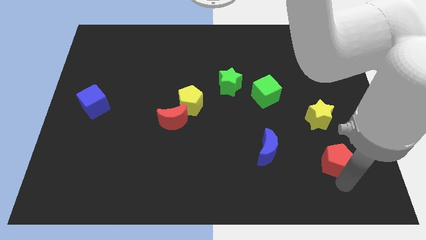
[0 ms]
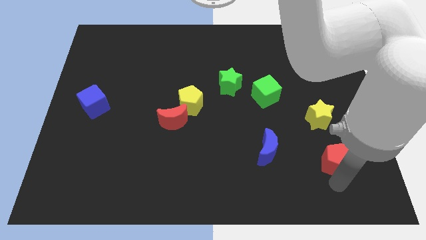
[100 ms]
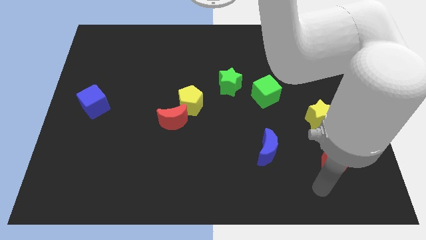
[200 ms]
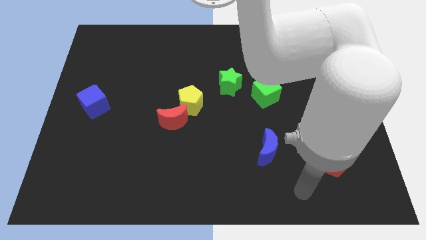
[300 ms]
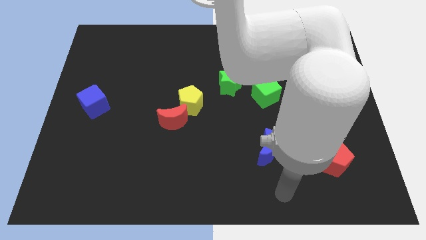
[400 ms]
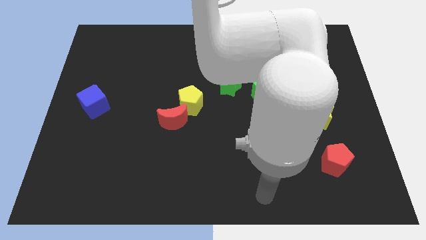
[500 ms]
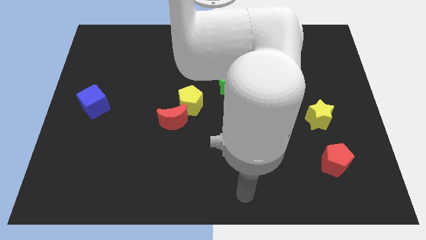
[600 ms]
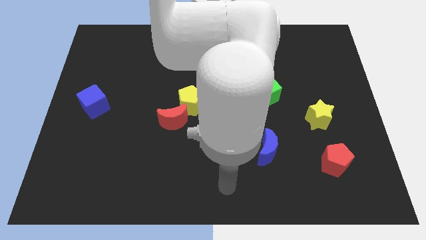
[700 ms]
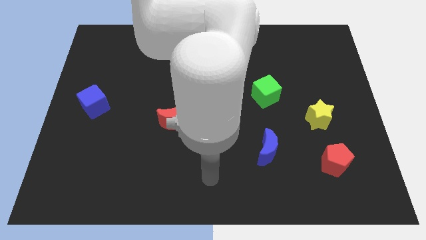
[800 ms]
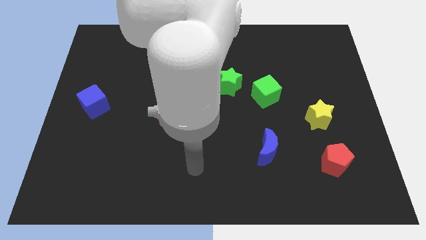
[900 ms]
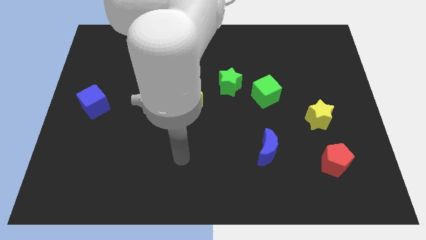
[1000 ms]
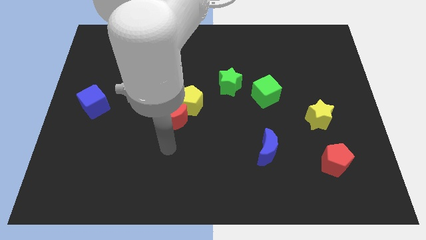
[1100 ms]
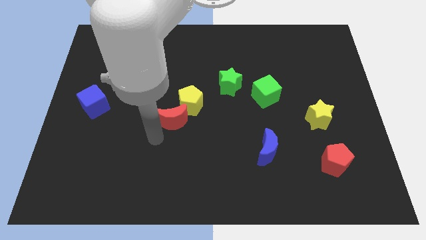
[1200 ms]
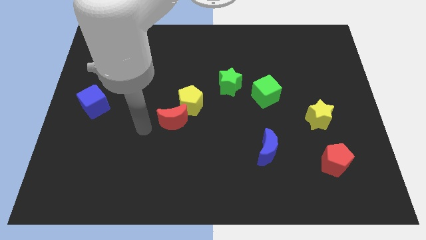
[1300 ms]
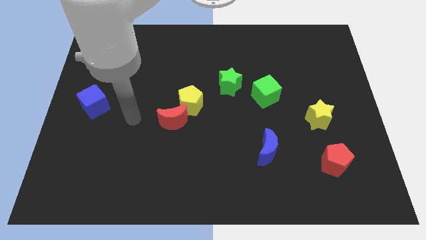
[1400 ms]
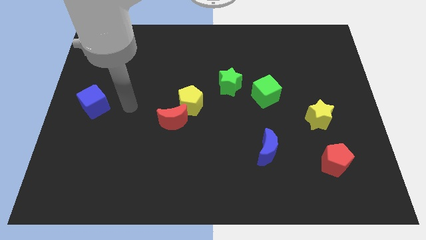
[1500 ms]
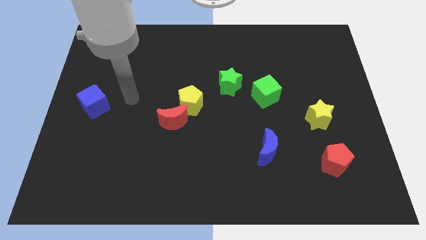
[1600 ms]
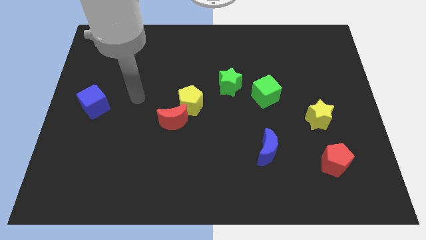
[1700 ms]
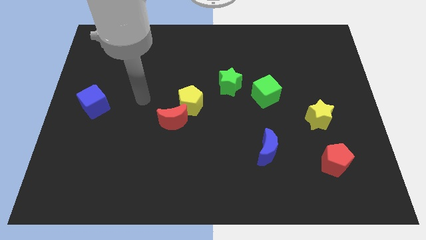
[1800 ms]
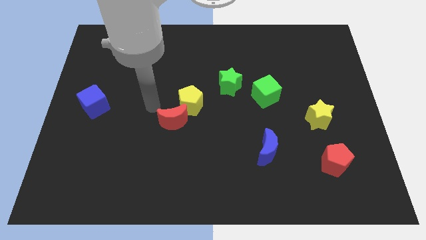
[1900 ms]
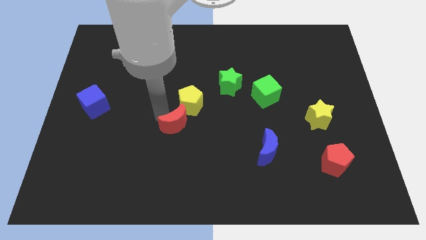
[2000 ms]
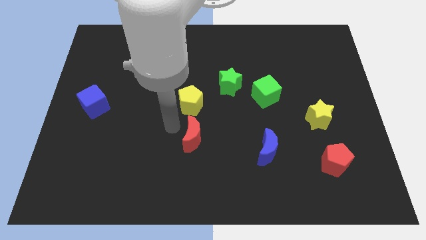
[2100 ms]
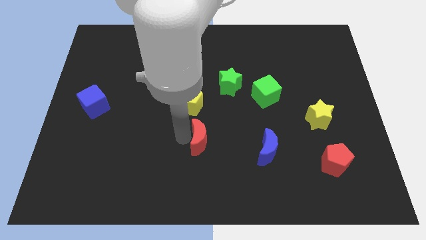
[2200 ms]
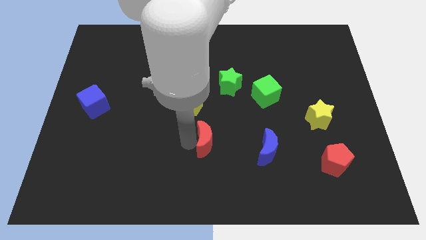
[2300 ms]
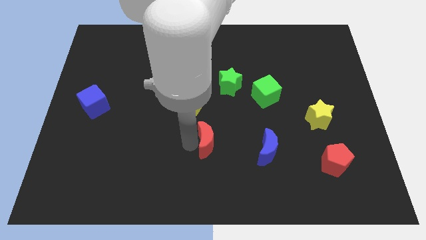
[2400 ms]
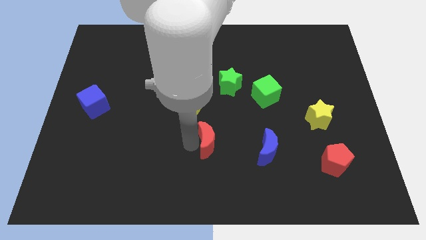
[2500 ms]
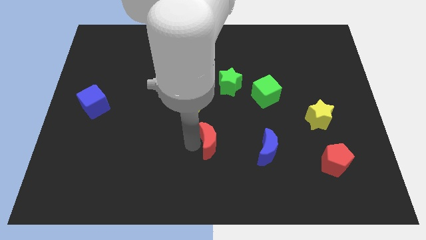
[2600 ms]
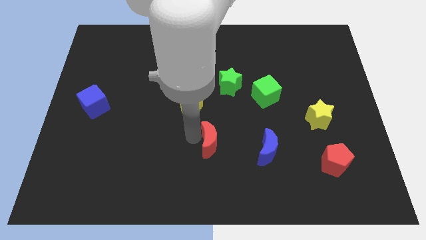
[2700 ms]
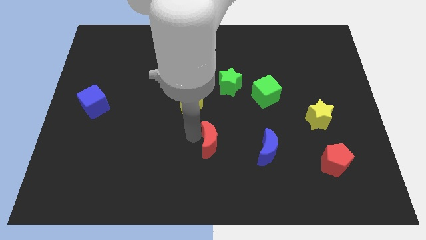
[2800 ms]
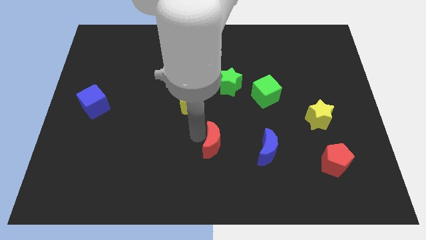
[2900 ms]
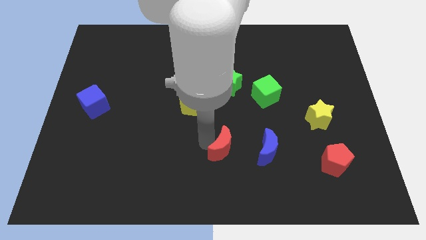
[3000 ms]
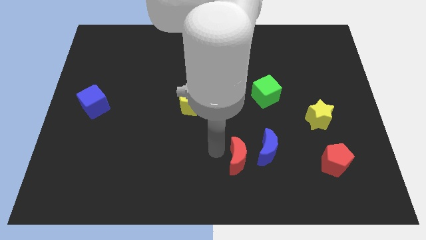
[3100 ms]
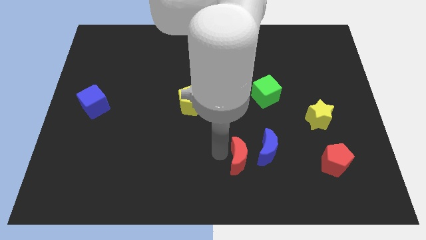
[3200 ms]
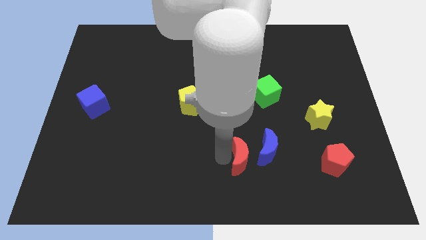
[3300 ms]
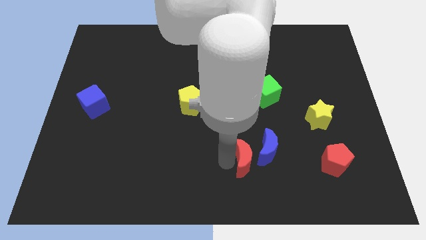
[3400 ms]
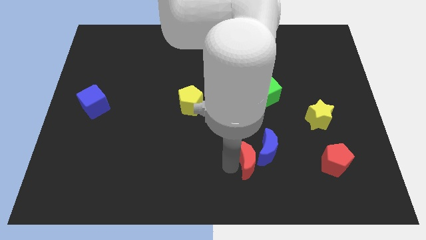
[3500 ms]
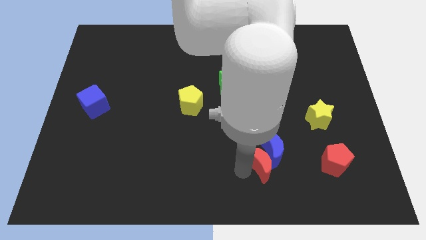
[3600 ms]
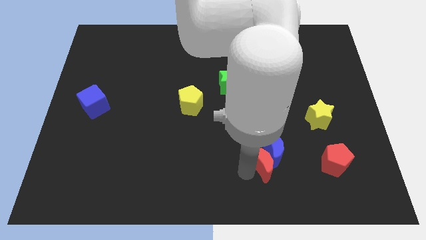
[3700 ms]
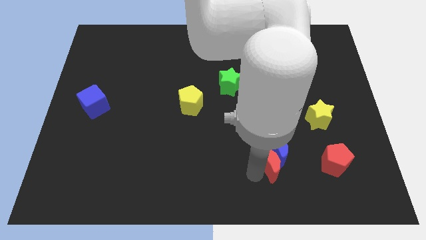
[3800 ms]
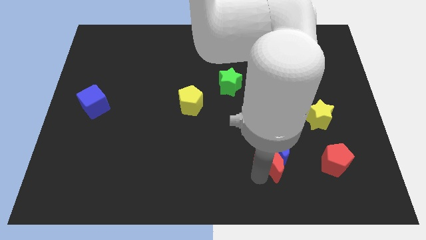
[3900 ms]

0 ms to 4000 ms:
push the red moon into the blue moon

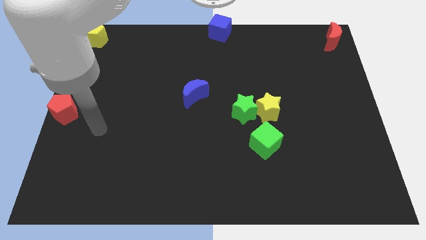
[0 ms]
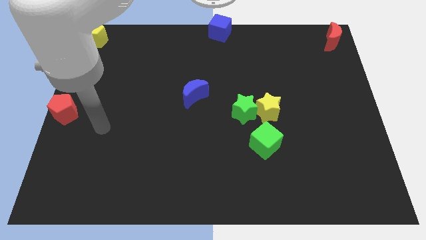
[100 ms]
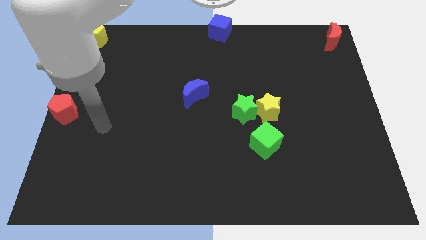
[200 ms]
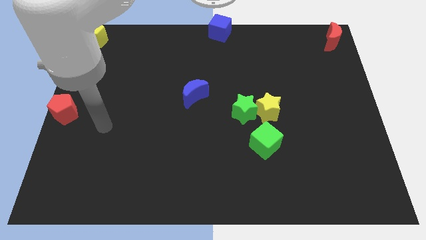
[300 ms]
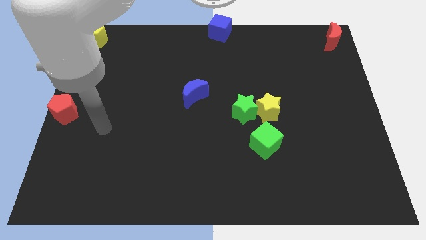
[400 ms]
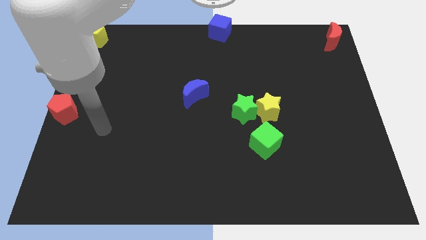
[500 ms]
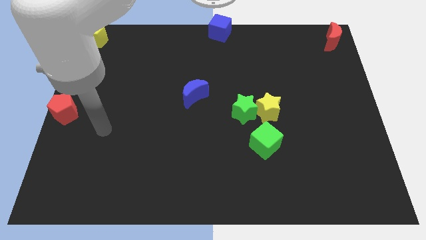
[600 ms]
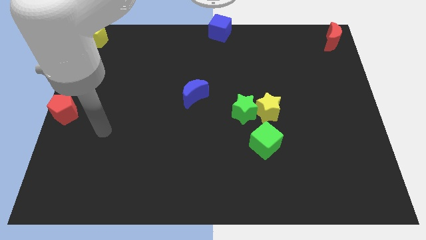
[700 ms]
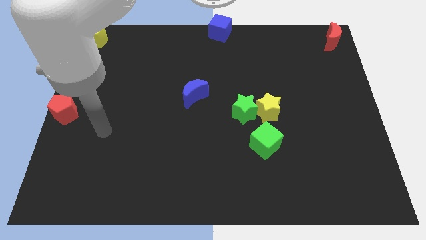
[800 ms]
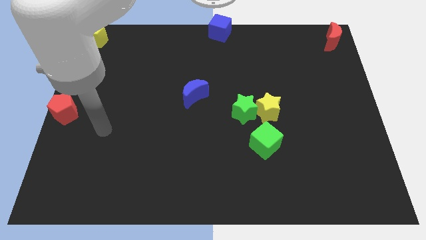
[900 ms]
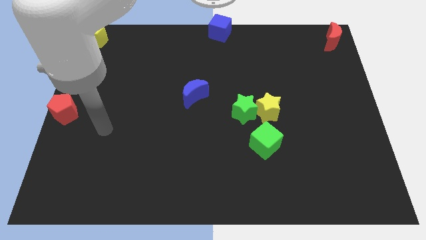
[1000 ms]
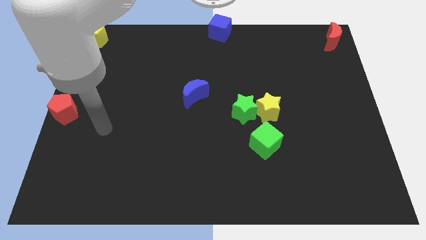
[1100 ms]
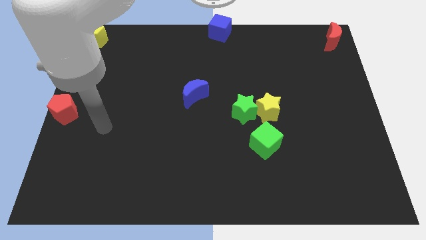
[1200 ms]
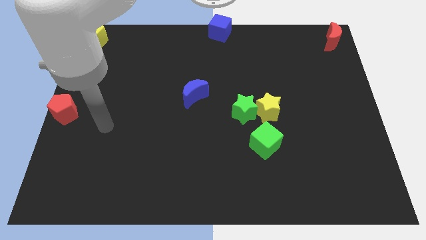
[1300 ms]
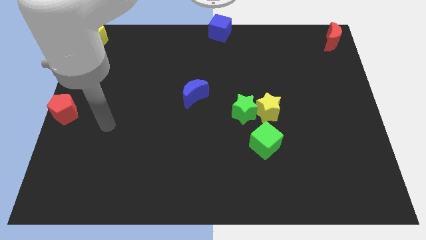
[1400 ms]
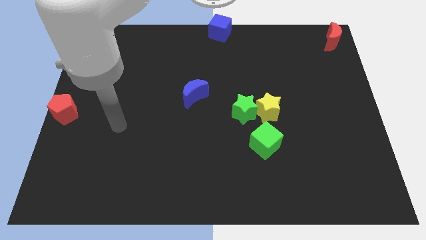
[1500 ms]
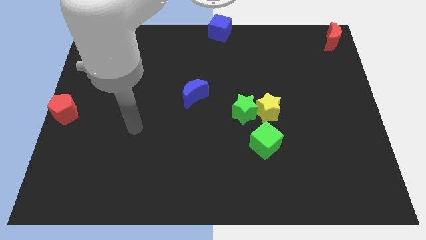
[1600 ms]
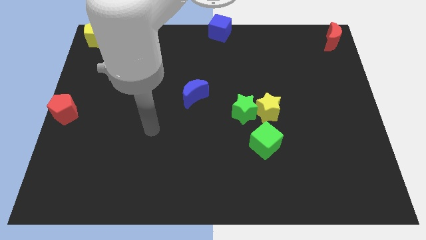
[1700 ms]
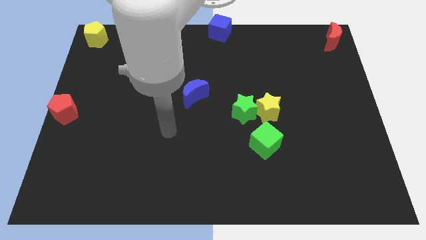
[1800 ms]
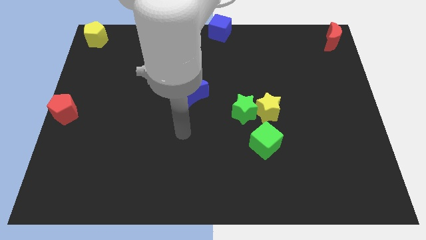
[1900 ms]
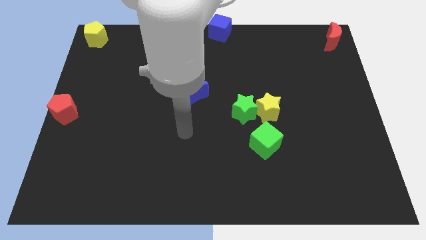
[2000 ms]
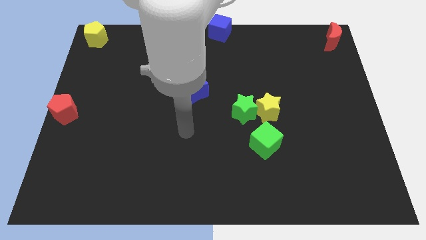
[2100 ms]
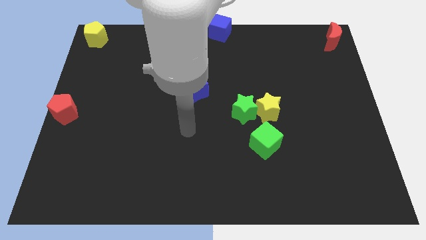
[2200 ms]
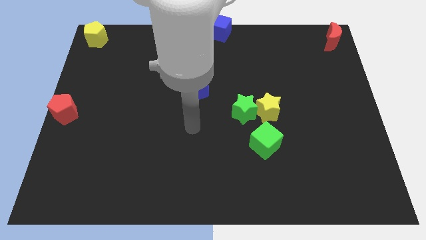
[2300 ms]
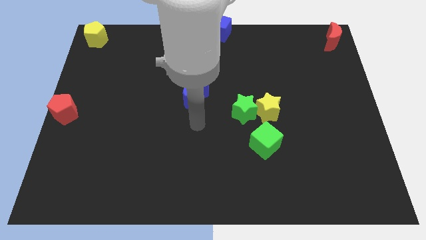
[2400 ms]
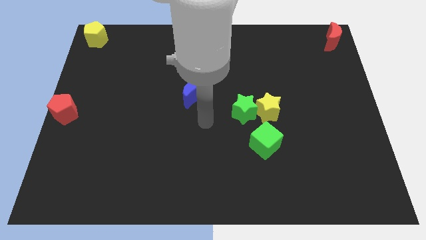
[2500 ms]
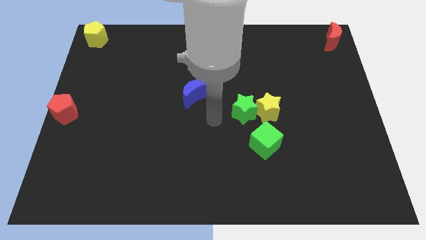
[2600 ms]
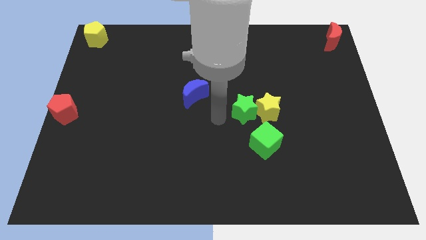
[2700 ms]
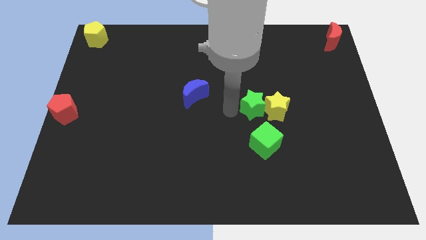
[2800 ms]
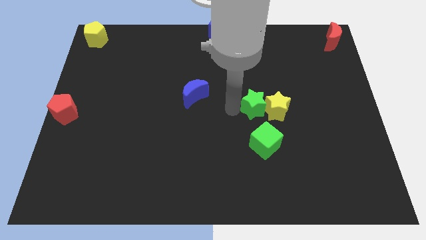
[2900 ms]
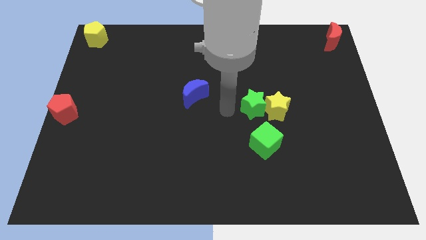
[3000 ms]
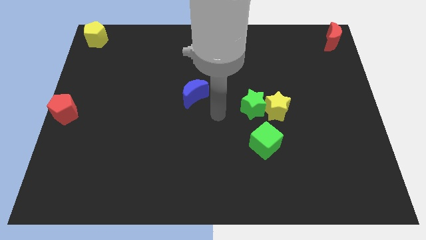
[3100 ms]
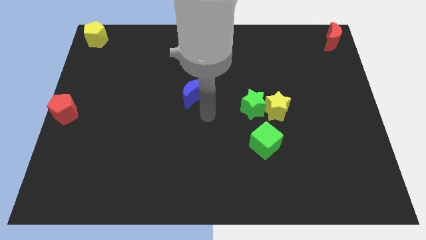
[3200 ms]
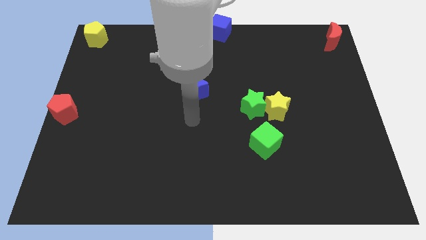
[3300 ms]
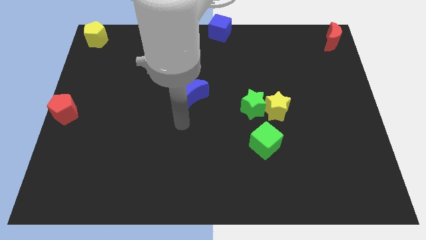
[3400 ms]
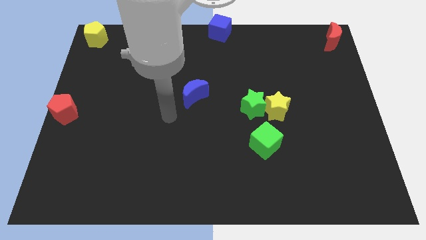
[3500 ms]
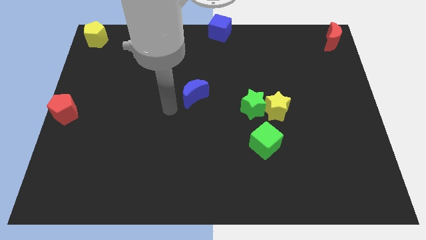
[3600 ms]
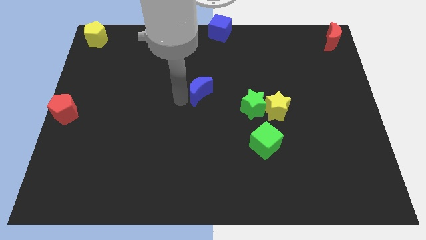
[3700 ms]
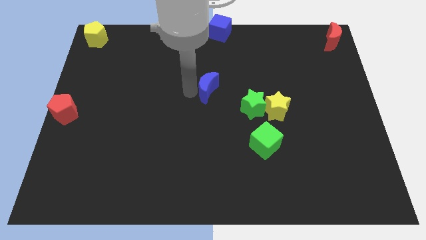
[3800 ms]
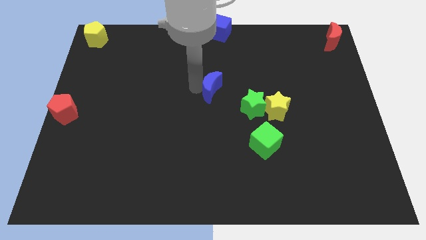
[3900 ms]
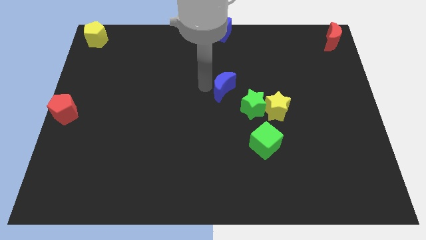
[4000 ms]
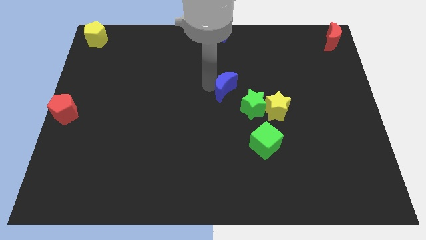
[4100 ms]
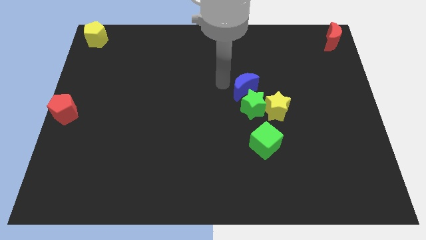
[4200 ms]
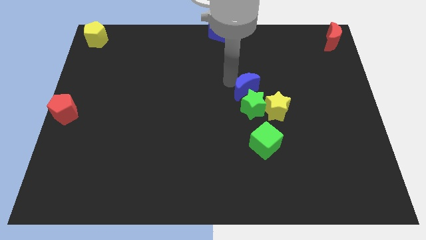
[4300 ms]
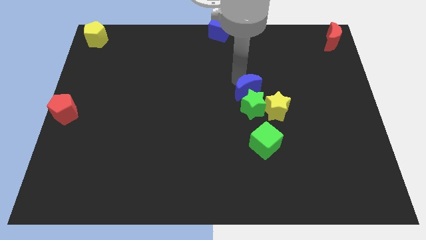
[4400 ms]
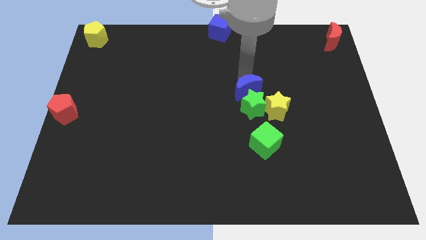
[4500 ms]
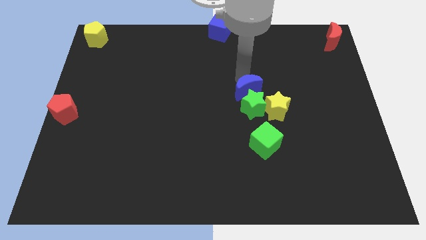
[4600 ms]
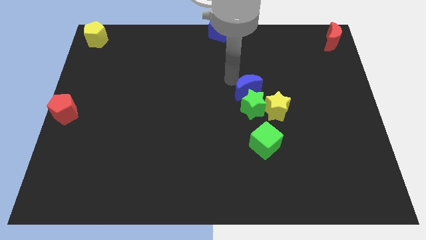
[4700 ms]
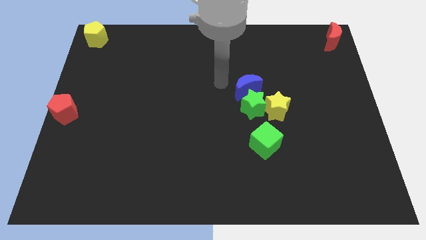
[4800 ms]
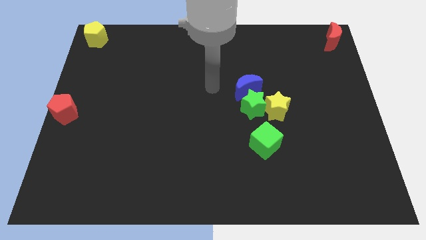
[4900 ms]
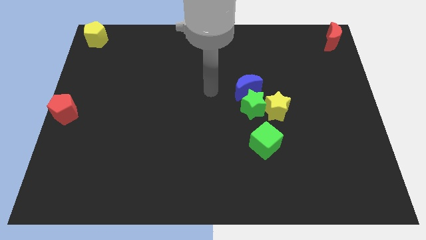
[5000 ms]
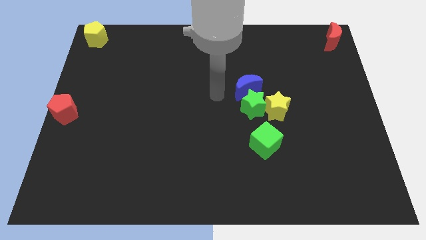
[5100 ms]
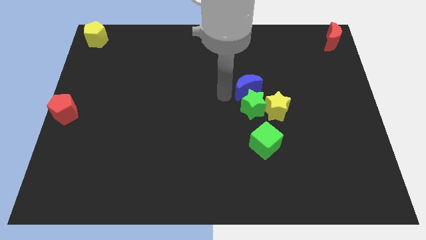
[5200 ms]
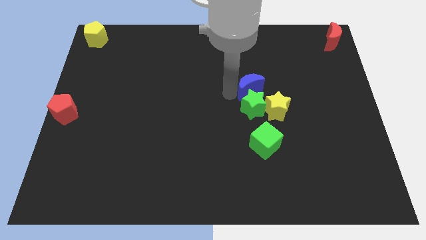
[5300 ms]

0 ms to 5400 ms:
move the blue crescent above the green star
